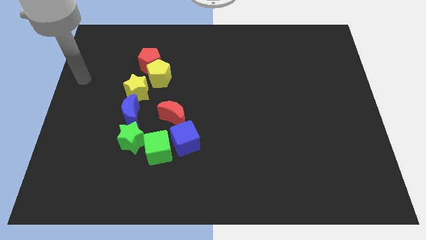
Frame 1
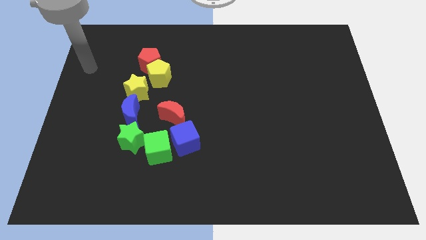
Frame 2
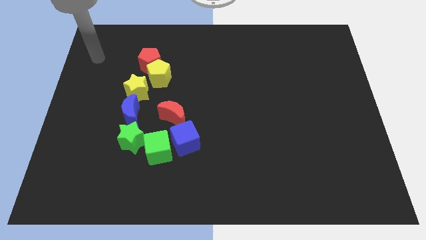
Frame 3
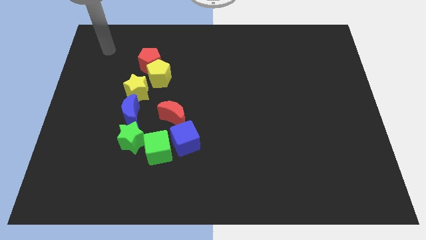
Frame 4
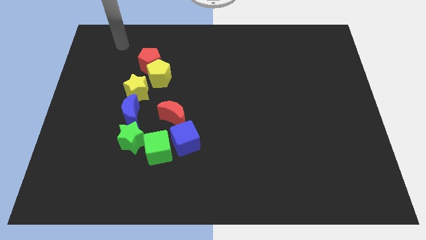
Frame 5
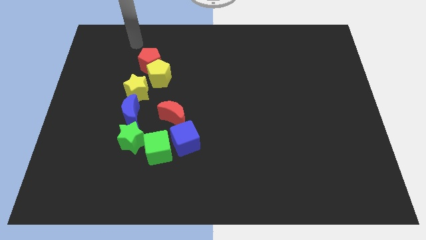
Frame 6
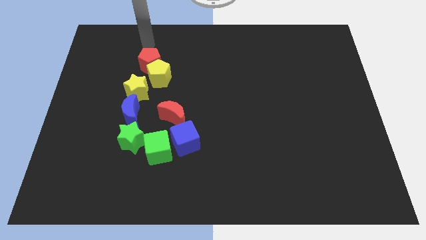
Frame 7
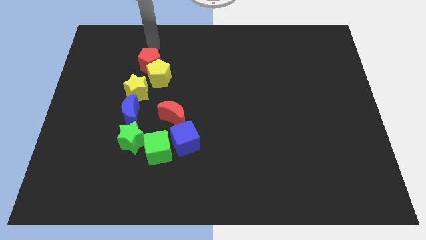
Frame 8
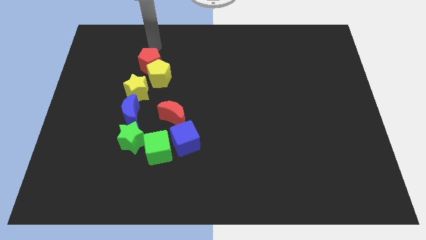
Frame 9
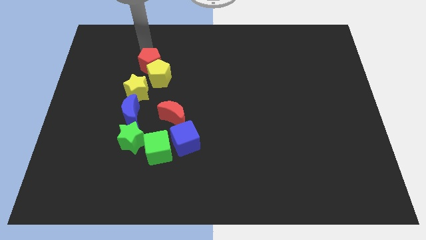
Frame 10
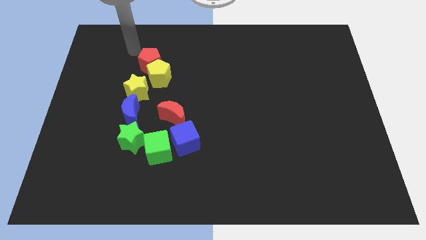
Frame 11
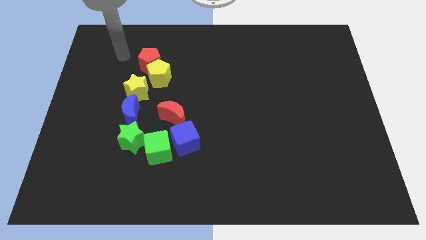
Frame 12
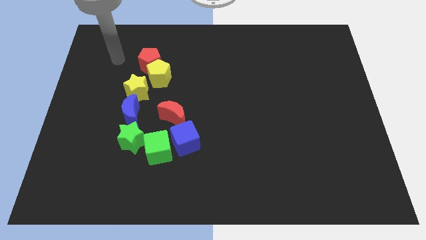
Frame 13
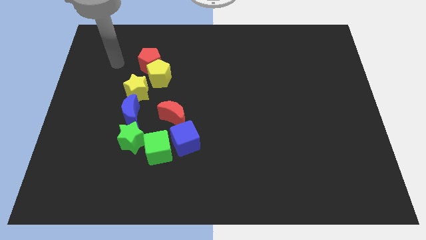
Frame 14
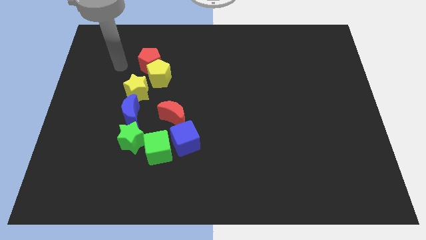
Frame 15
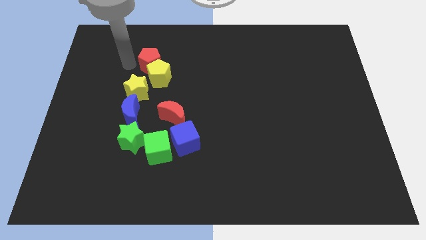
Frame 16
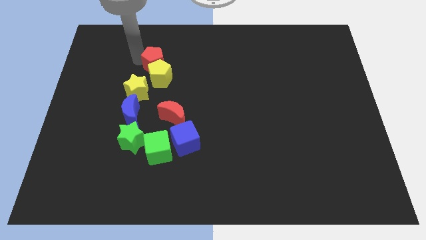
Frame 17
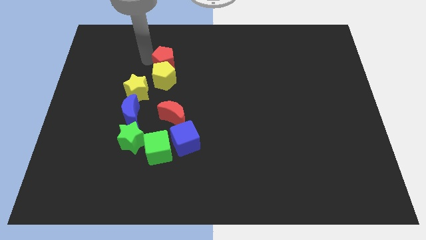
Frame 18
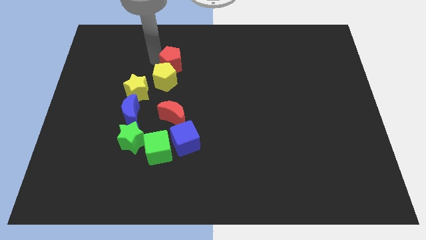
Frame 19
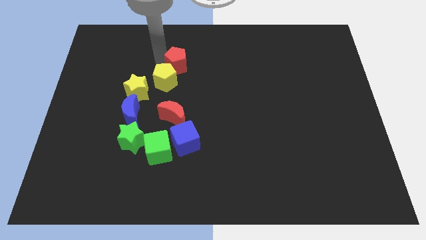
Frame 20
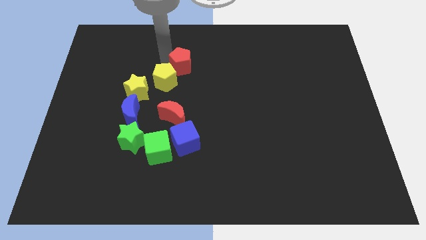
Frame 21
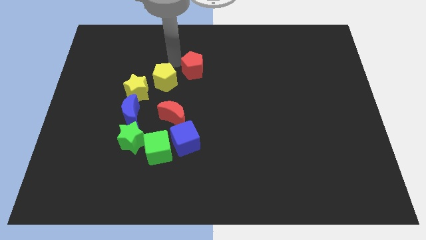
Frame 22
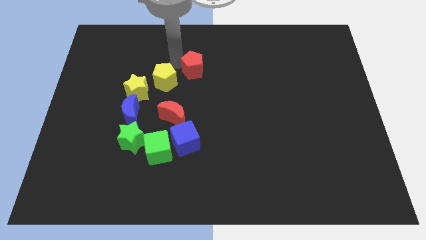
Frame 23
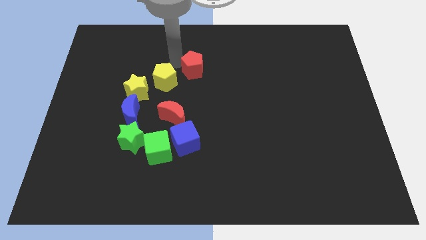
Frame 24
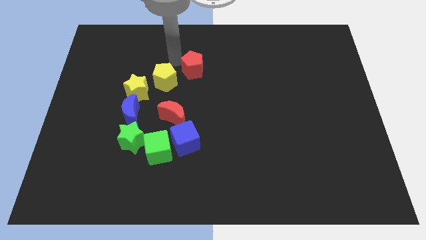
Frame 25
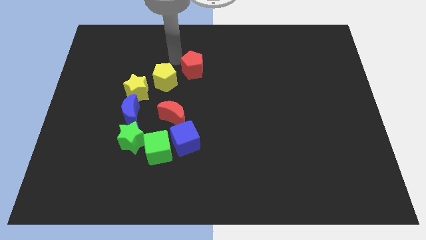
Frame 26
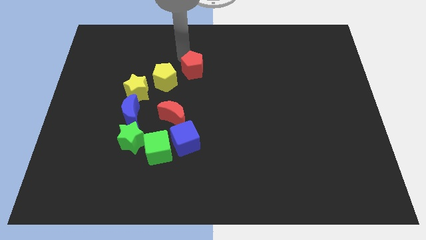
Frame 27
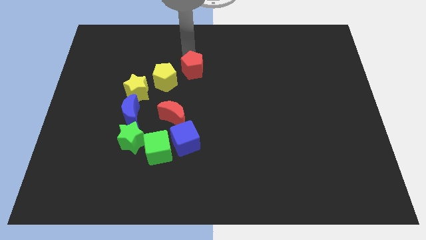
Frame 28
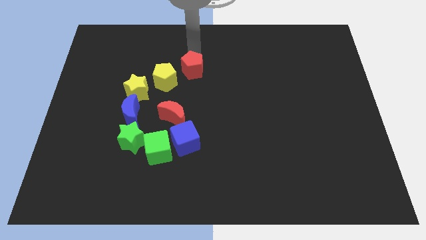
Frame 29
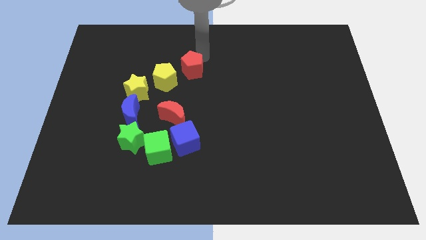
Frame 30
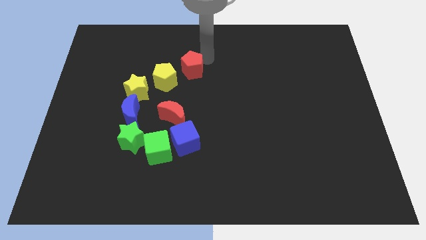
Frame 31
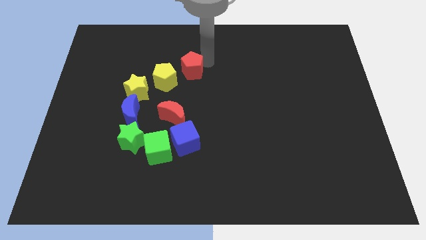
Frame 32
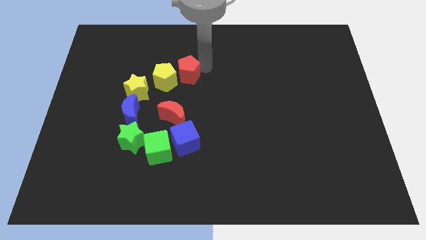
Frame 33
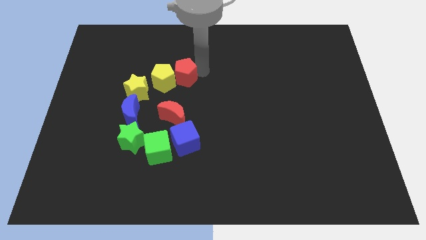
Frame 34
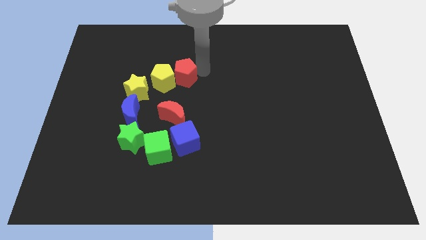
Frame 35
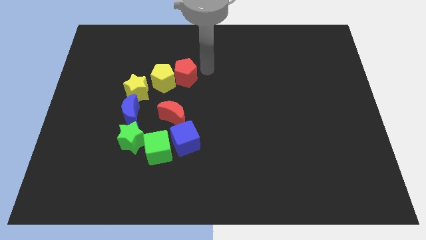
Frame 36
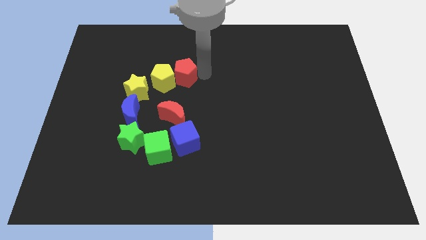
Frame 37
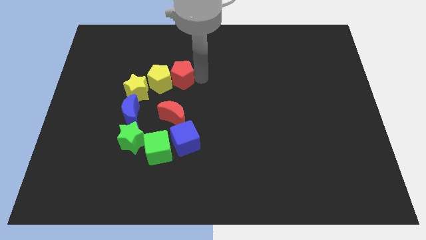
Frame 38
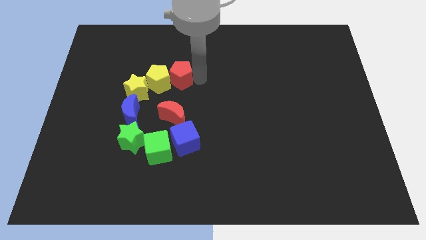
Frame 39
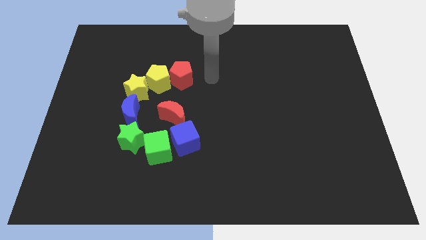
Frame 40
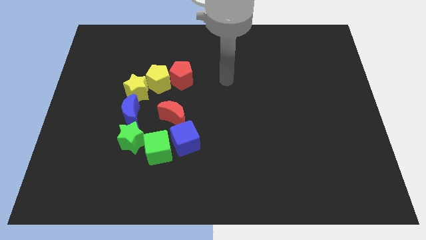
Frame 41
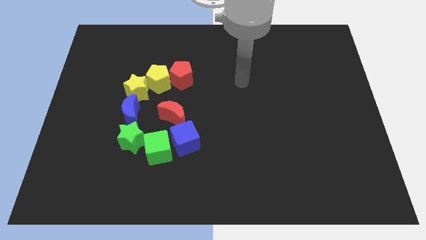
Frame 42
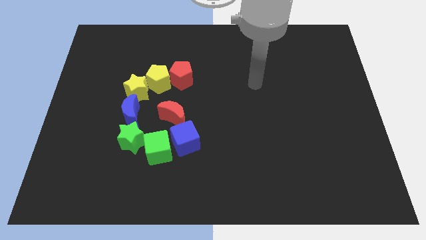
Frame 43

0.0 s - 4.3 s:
move the red pentagon to the right of the yellow pentagon

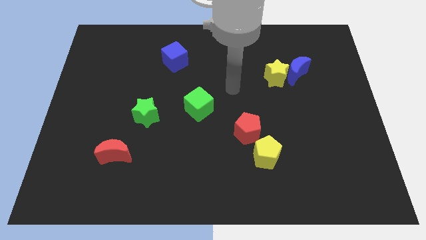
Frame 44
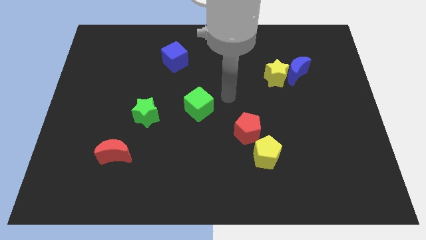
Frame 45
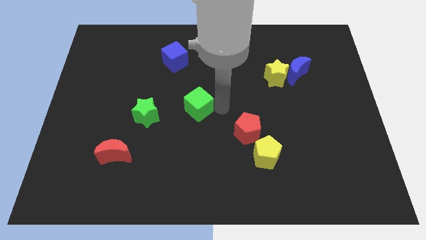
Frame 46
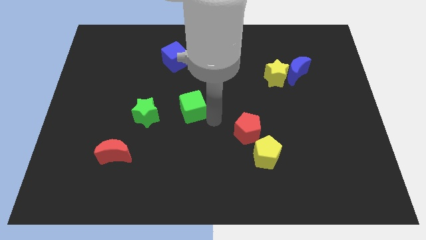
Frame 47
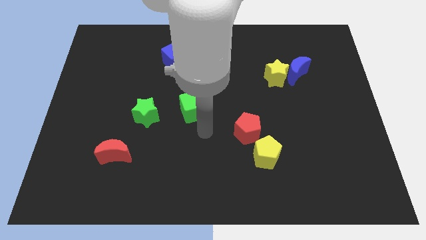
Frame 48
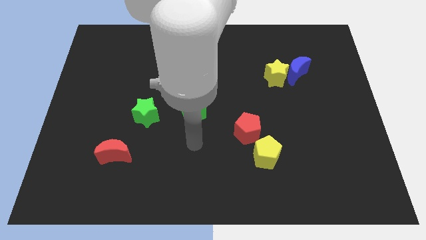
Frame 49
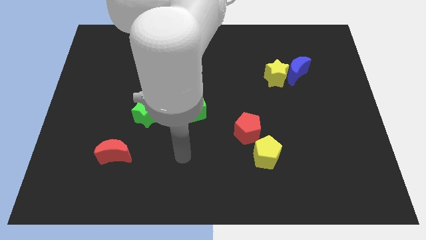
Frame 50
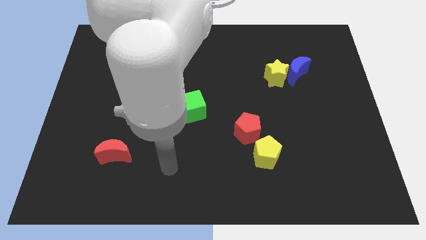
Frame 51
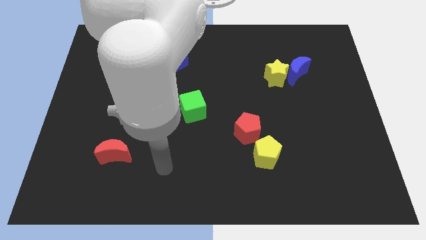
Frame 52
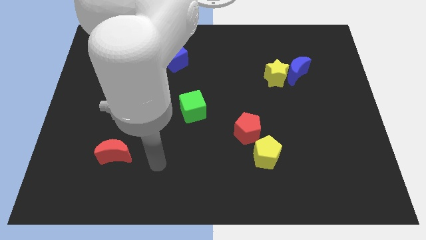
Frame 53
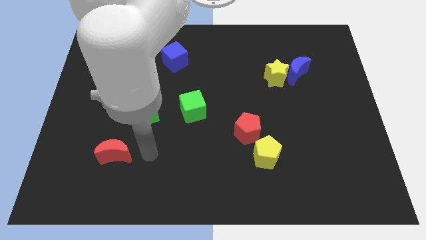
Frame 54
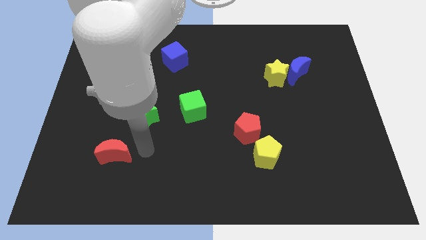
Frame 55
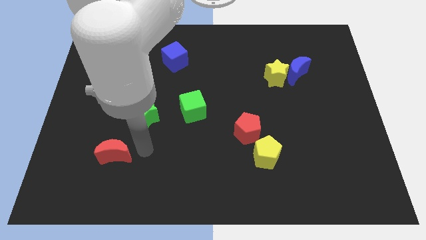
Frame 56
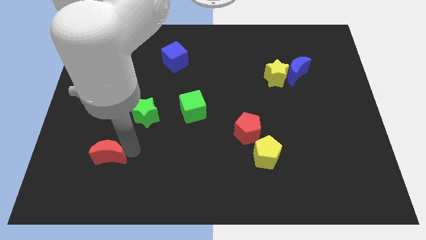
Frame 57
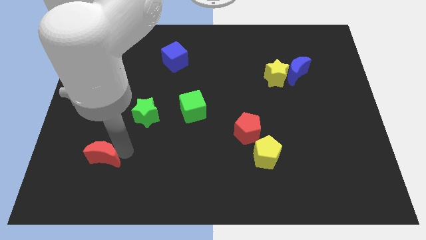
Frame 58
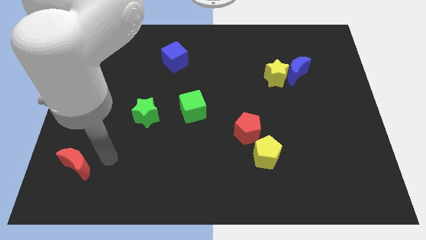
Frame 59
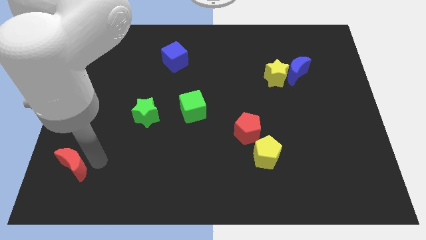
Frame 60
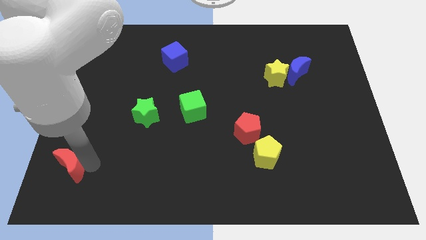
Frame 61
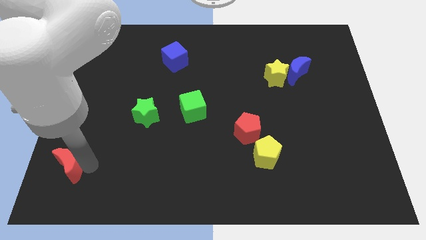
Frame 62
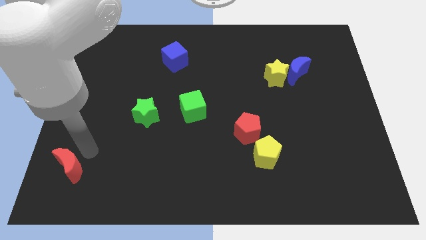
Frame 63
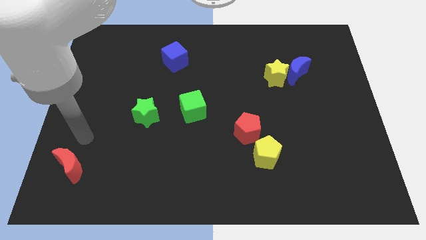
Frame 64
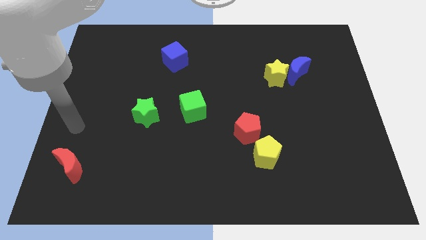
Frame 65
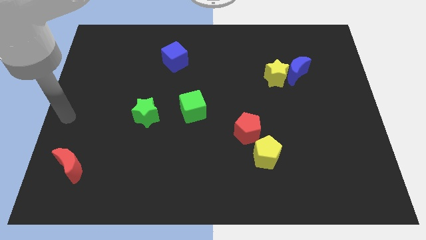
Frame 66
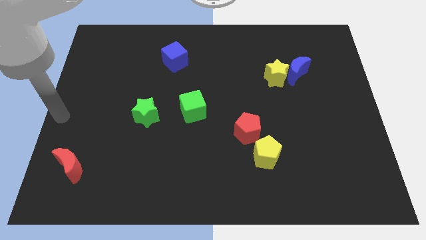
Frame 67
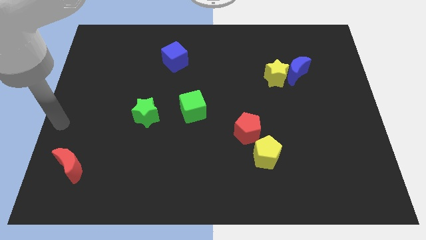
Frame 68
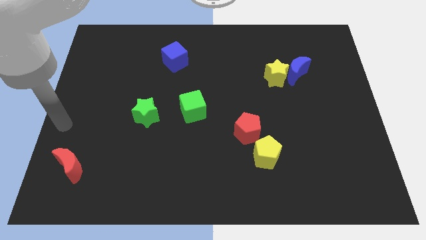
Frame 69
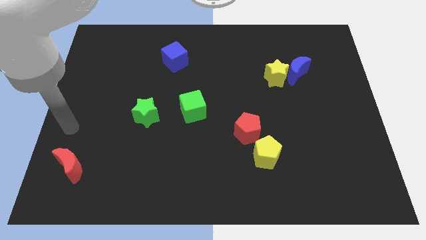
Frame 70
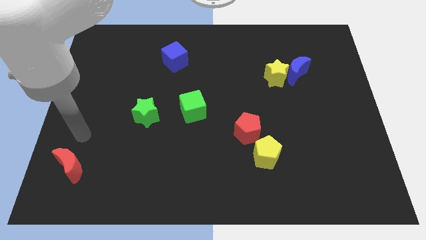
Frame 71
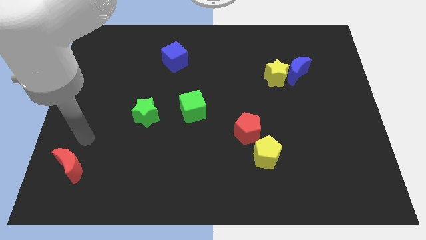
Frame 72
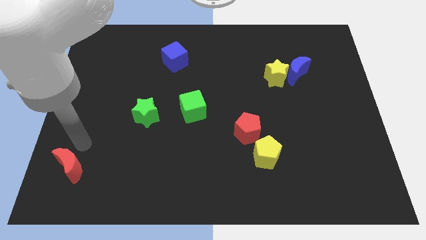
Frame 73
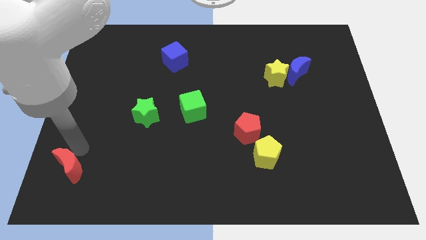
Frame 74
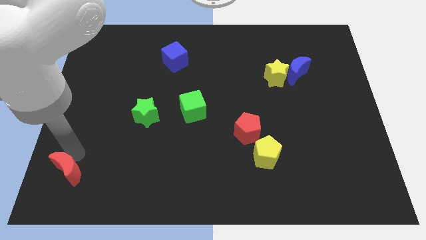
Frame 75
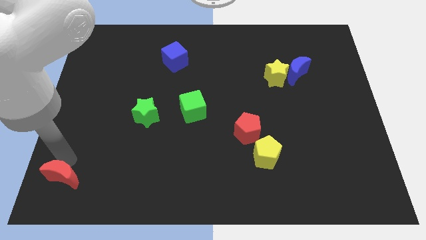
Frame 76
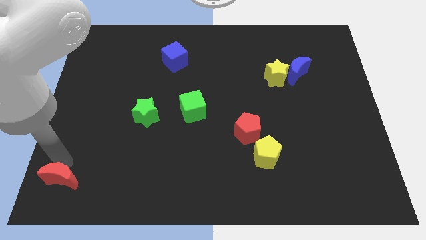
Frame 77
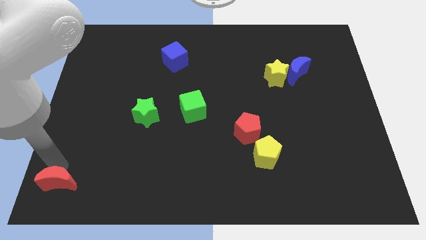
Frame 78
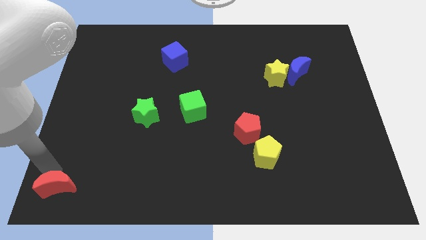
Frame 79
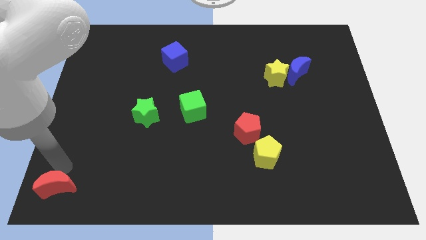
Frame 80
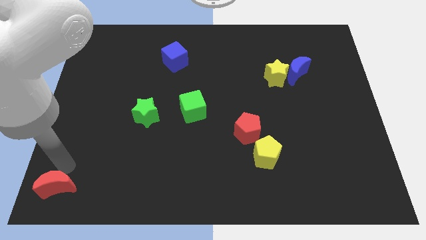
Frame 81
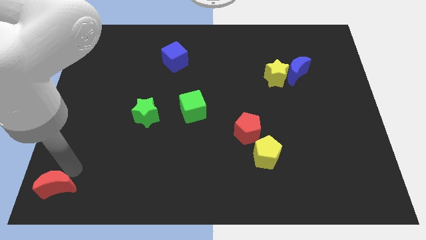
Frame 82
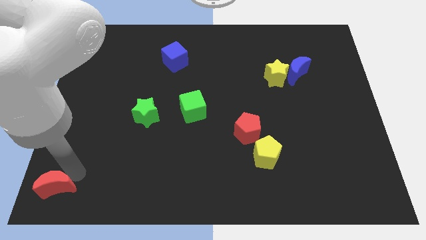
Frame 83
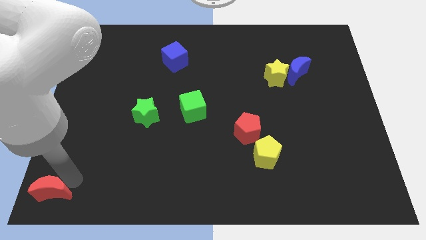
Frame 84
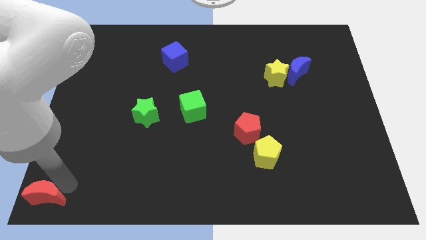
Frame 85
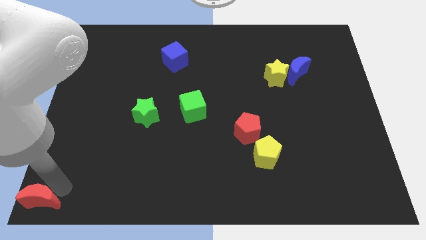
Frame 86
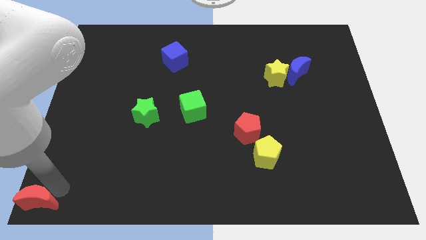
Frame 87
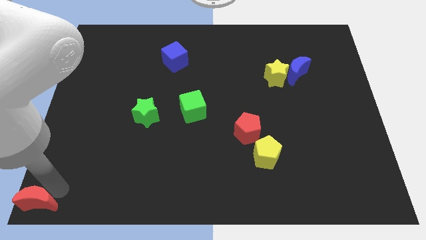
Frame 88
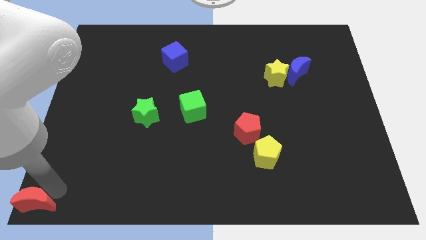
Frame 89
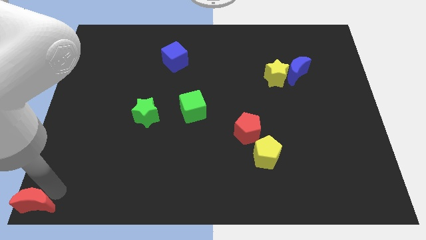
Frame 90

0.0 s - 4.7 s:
place the red moon to the bottom left
